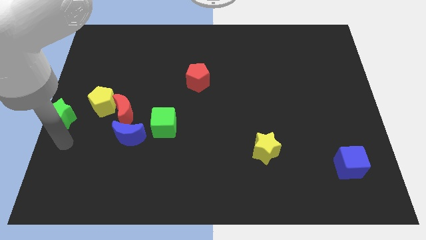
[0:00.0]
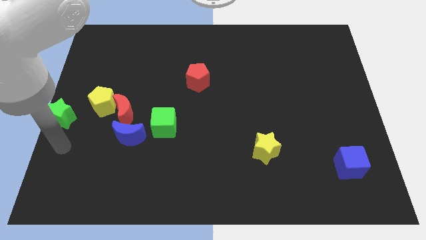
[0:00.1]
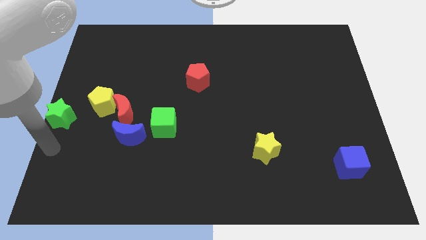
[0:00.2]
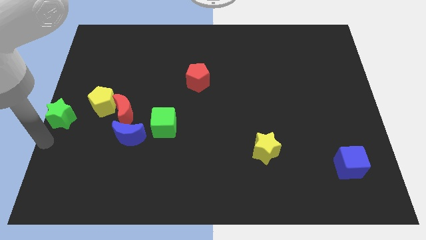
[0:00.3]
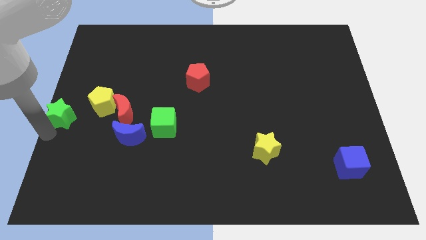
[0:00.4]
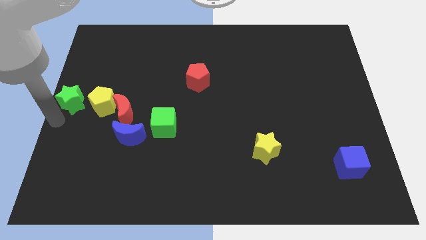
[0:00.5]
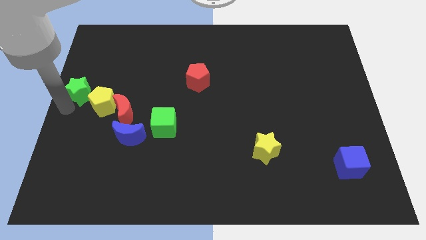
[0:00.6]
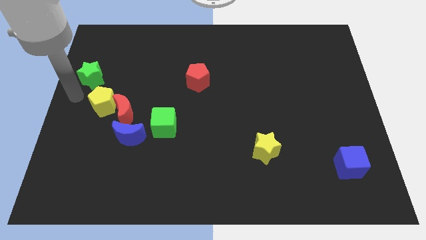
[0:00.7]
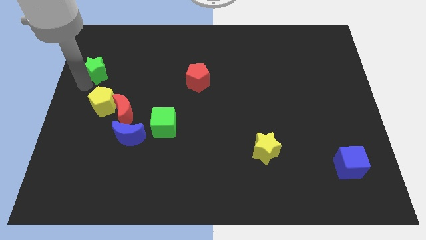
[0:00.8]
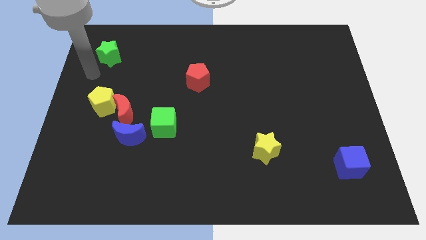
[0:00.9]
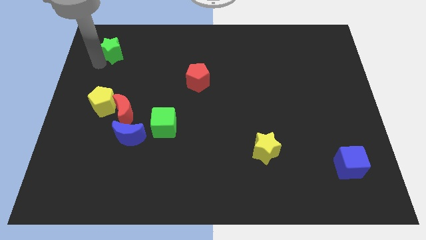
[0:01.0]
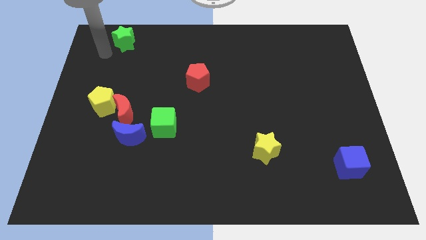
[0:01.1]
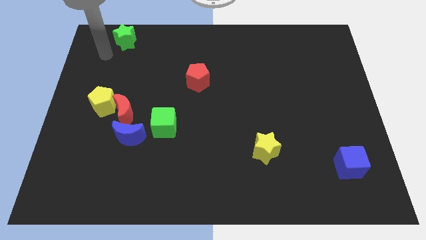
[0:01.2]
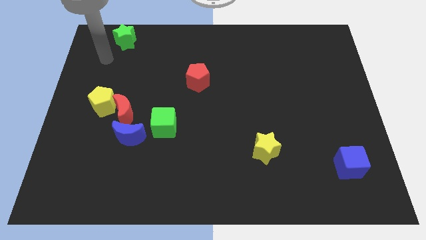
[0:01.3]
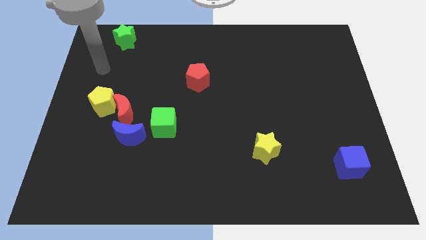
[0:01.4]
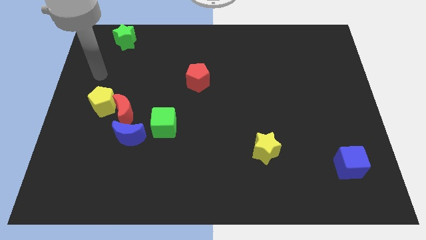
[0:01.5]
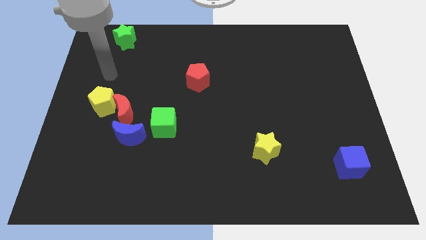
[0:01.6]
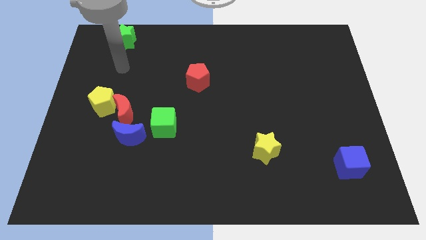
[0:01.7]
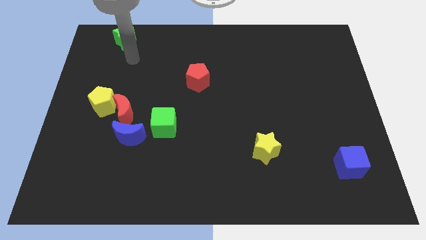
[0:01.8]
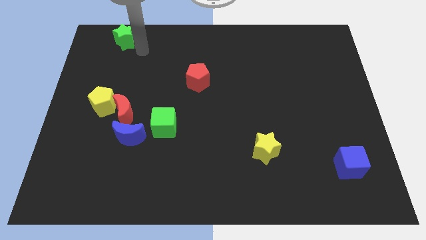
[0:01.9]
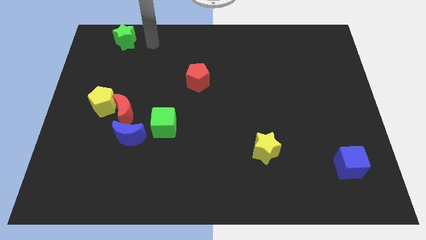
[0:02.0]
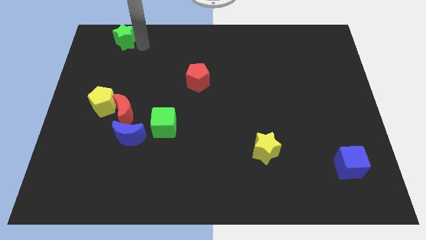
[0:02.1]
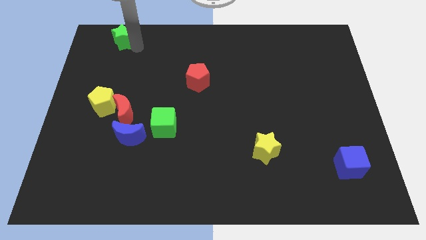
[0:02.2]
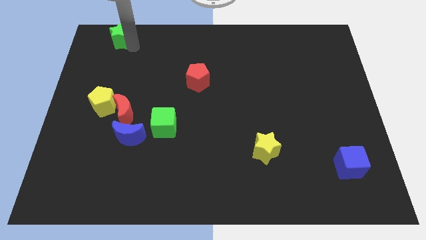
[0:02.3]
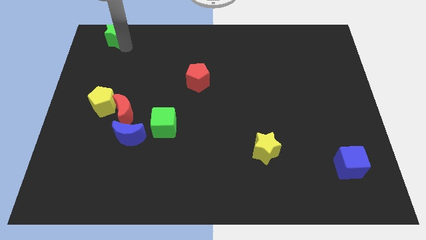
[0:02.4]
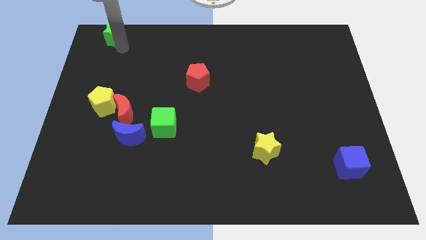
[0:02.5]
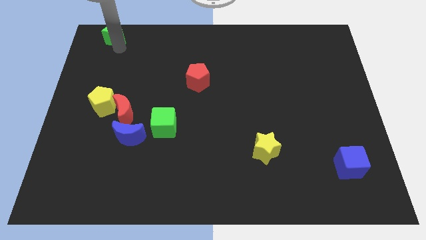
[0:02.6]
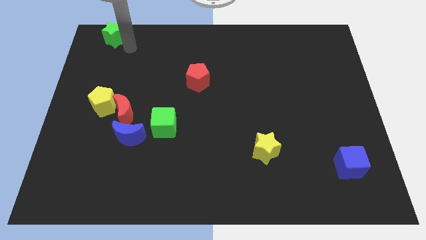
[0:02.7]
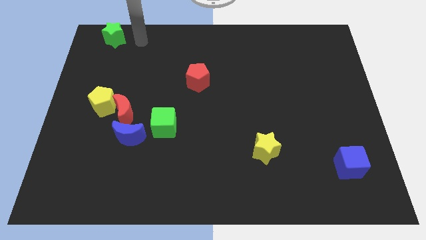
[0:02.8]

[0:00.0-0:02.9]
move green star upwards

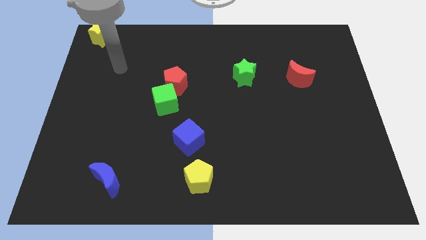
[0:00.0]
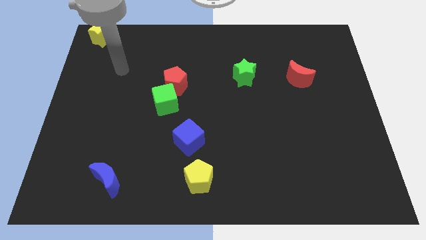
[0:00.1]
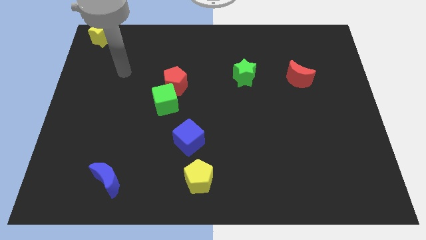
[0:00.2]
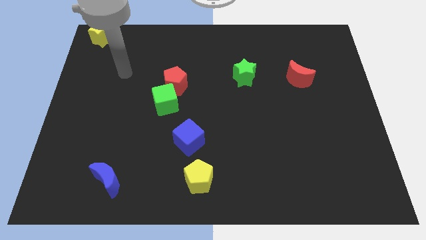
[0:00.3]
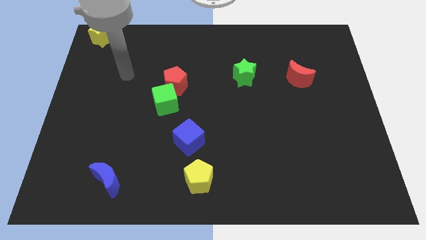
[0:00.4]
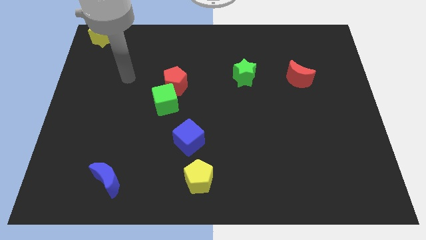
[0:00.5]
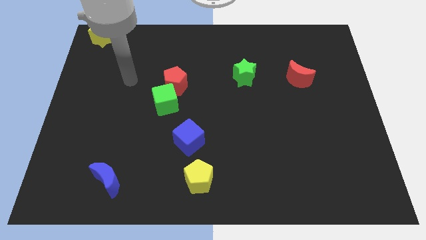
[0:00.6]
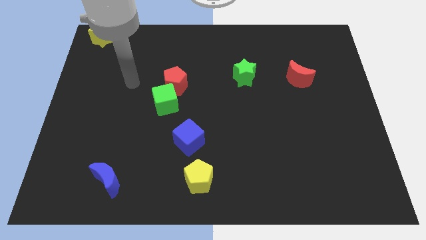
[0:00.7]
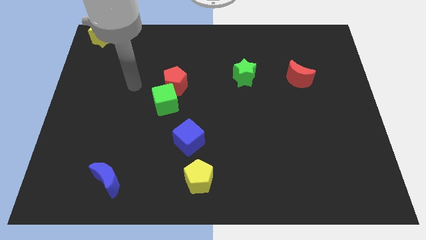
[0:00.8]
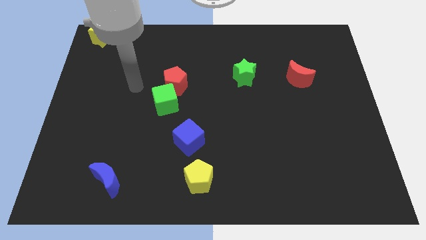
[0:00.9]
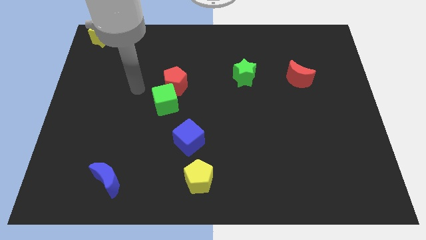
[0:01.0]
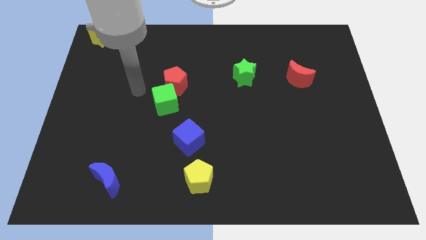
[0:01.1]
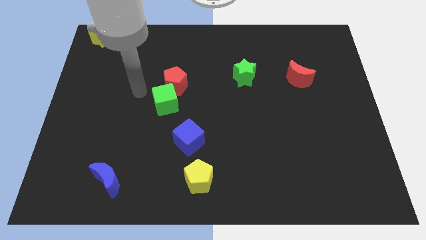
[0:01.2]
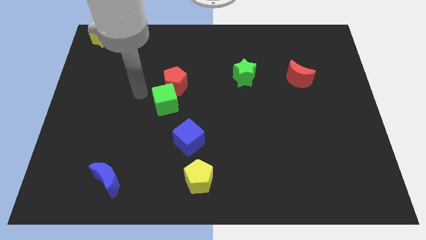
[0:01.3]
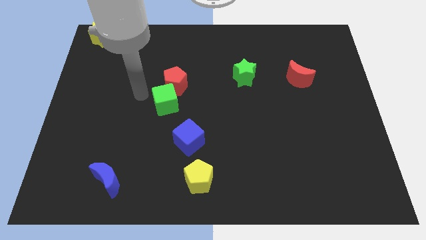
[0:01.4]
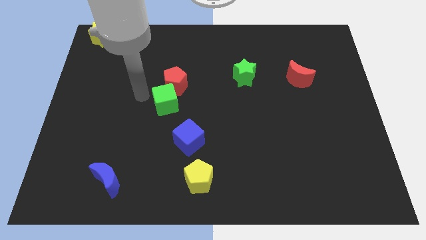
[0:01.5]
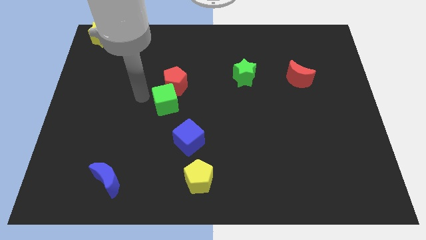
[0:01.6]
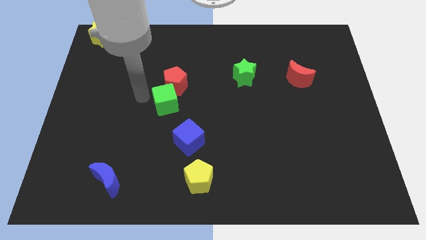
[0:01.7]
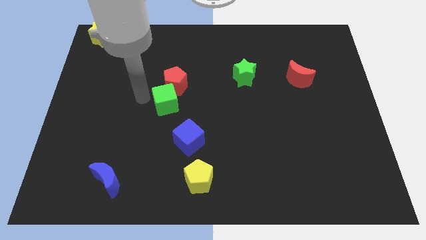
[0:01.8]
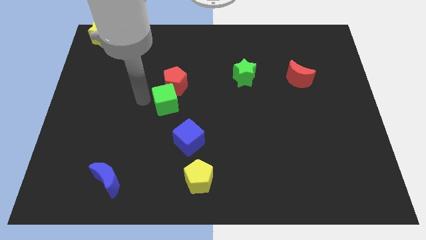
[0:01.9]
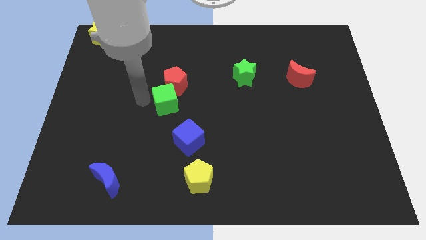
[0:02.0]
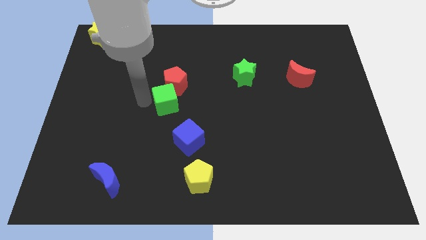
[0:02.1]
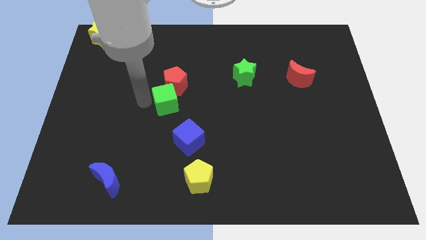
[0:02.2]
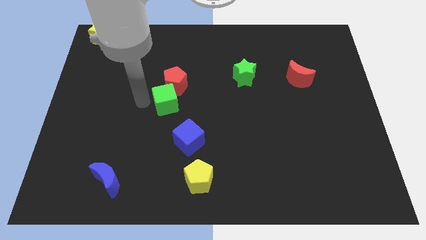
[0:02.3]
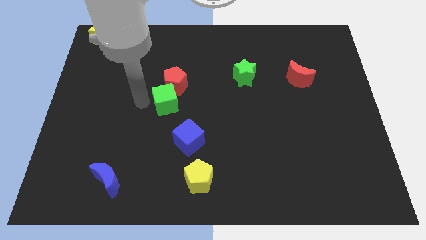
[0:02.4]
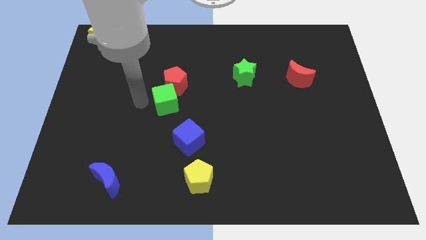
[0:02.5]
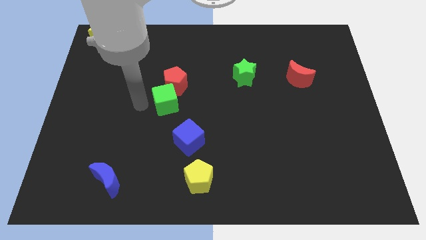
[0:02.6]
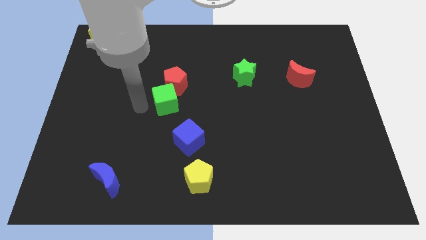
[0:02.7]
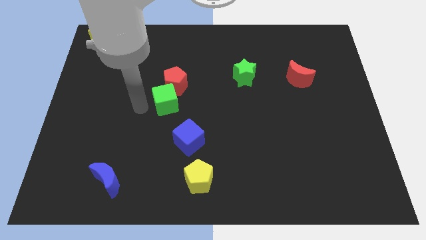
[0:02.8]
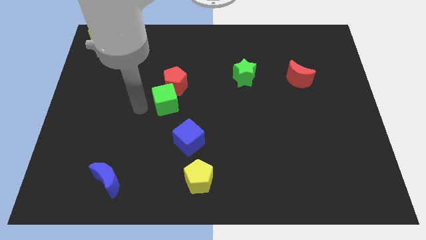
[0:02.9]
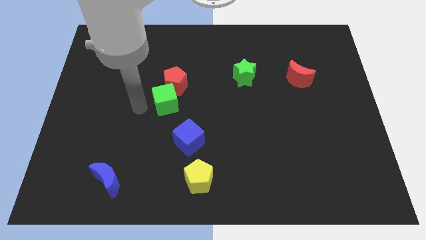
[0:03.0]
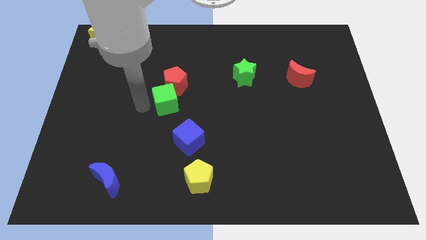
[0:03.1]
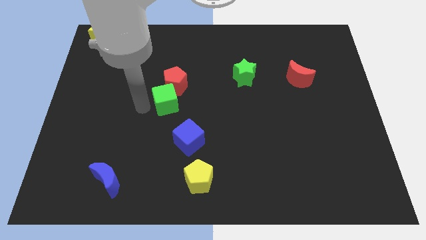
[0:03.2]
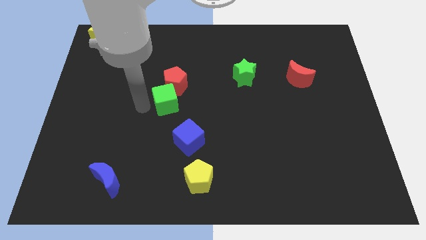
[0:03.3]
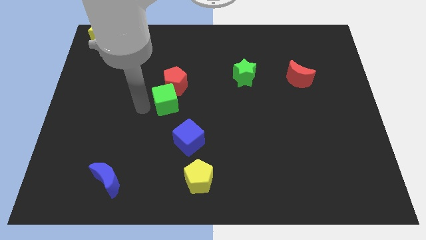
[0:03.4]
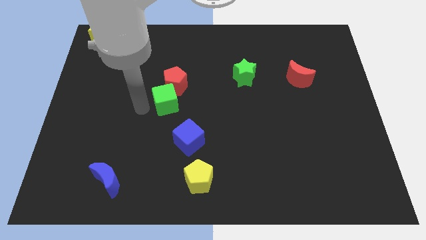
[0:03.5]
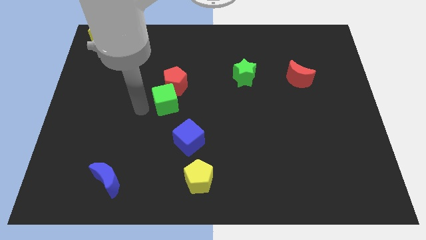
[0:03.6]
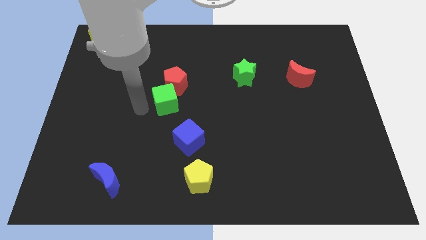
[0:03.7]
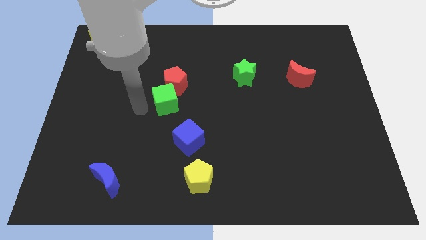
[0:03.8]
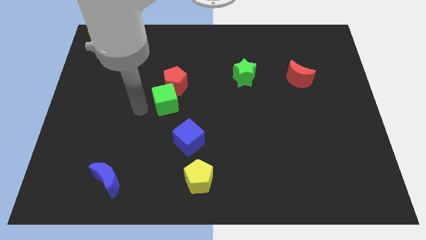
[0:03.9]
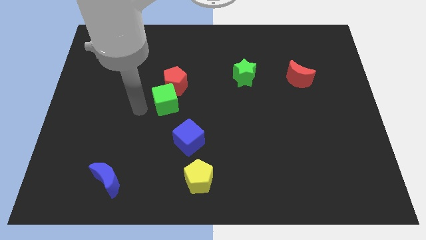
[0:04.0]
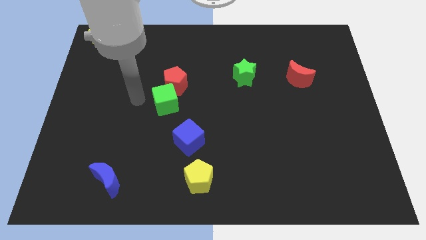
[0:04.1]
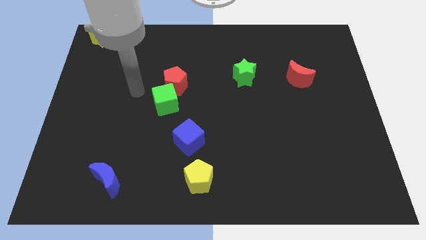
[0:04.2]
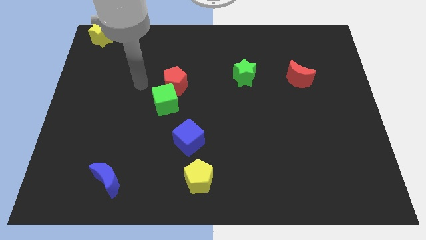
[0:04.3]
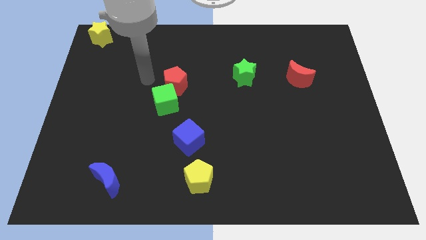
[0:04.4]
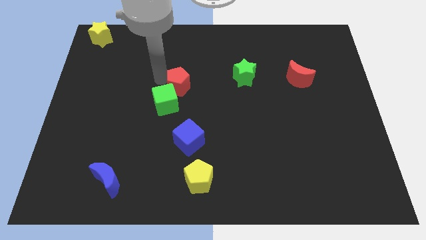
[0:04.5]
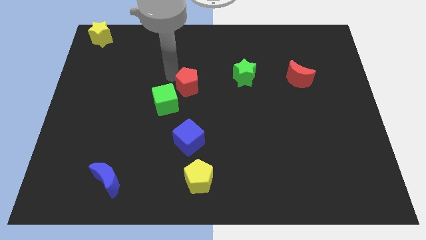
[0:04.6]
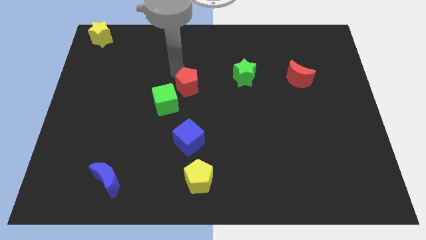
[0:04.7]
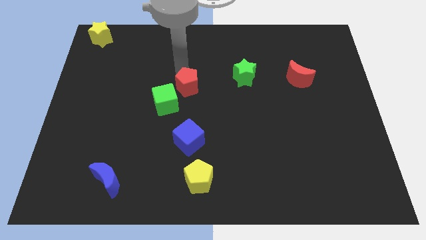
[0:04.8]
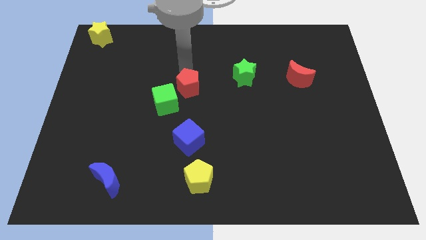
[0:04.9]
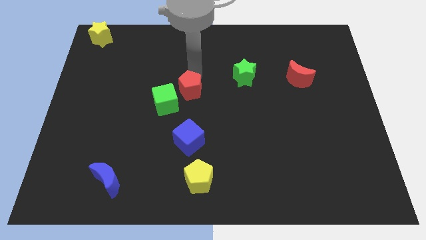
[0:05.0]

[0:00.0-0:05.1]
slightly move the red pentagon to the right

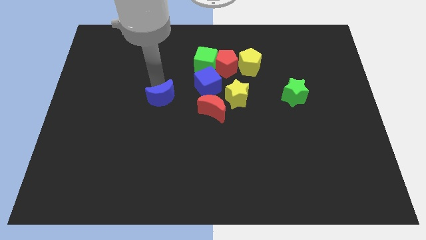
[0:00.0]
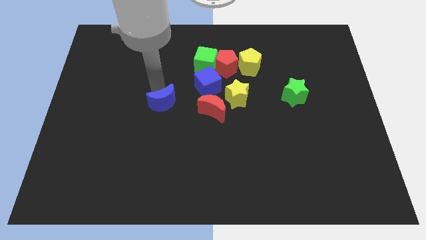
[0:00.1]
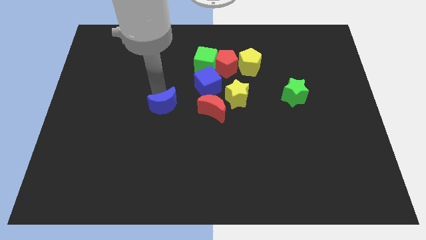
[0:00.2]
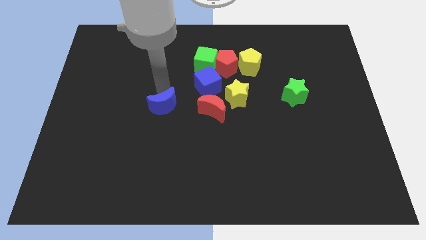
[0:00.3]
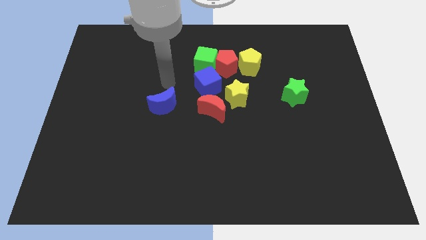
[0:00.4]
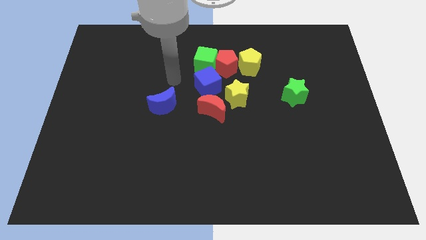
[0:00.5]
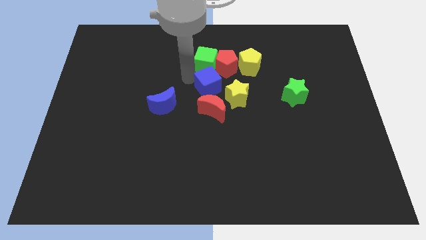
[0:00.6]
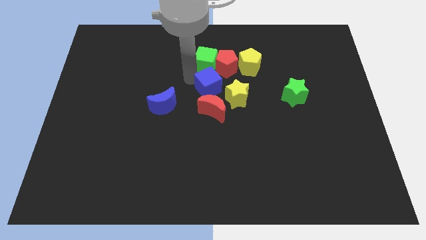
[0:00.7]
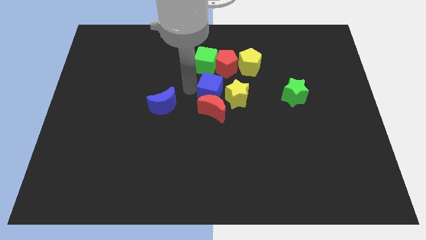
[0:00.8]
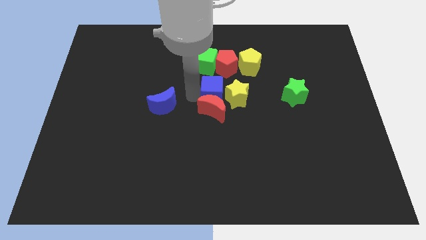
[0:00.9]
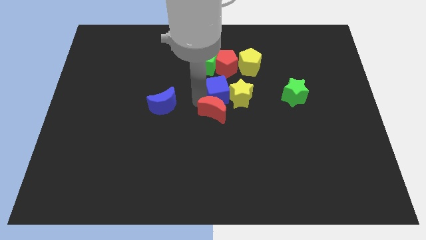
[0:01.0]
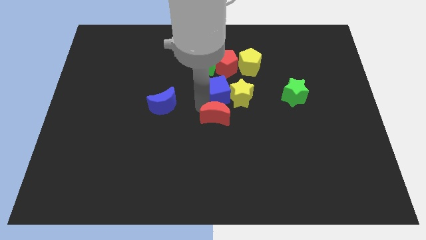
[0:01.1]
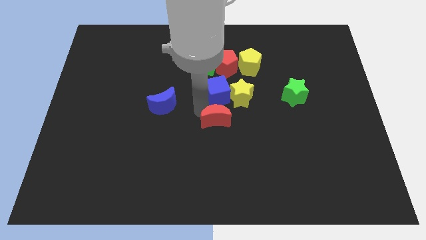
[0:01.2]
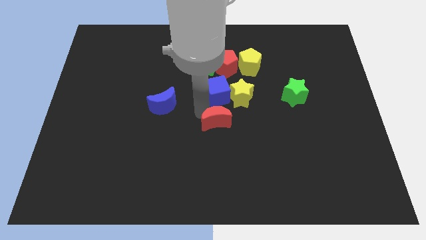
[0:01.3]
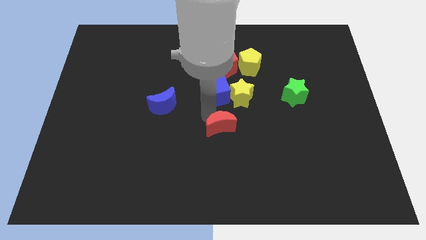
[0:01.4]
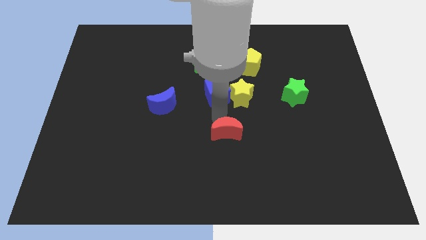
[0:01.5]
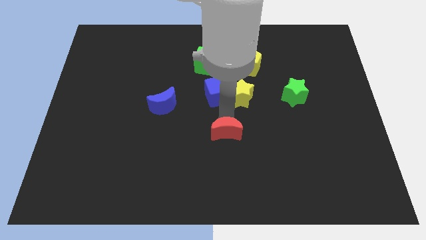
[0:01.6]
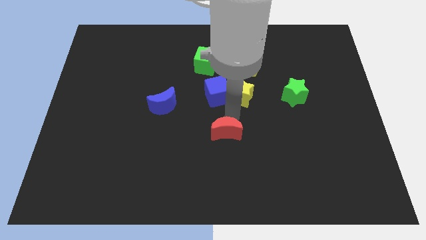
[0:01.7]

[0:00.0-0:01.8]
separate the red crescent away from the blue cube
